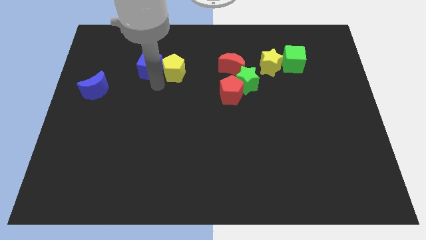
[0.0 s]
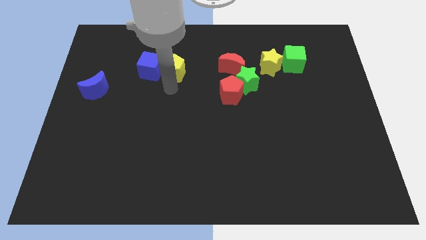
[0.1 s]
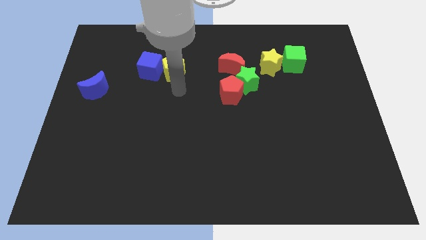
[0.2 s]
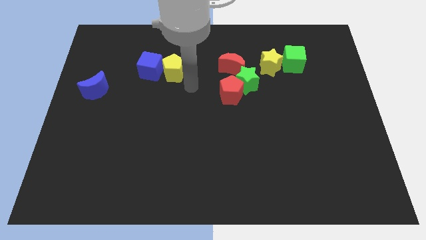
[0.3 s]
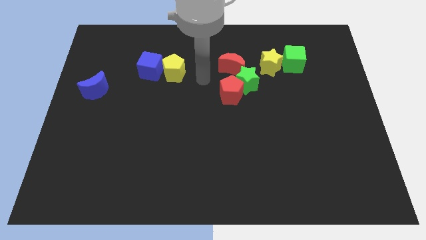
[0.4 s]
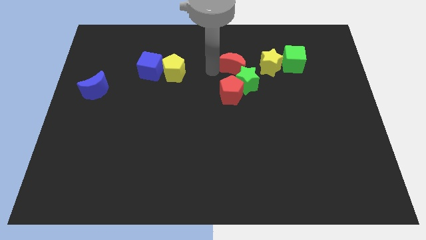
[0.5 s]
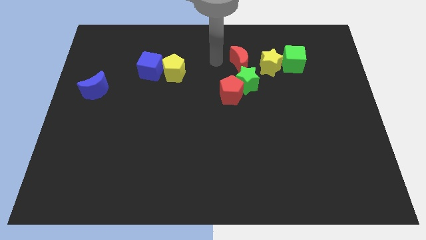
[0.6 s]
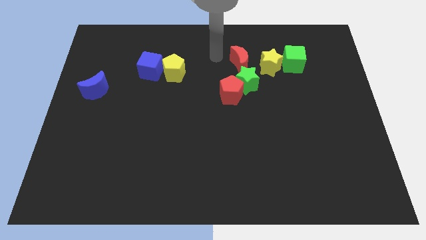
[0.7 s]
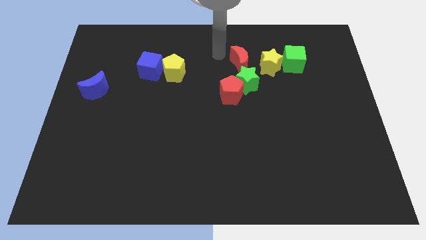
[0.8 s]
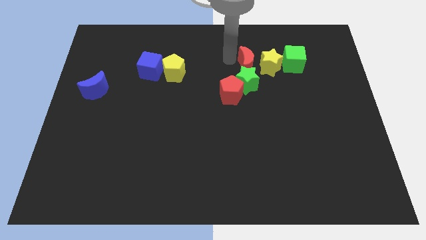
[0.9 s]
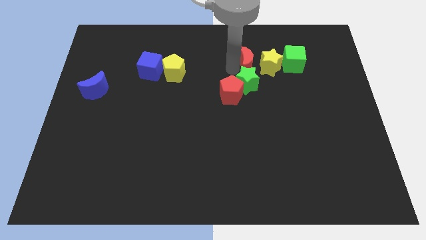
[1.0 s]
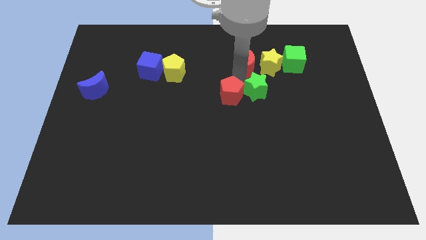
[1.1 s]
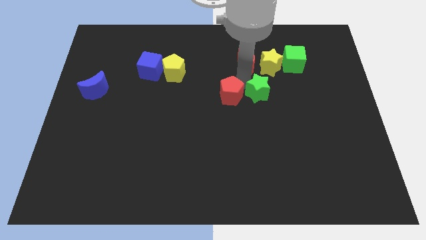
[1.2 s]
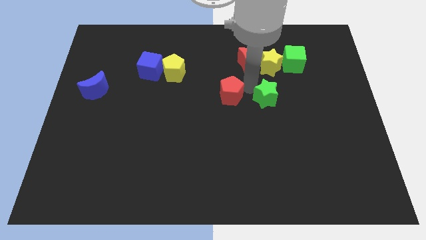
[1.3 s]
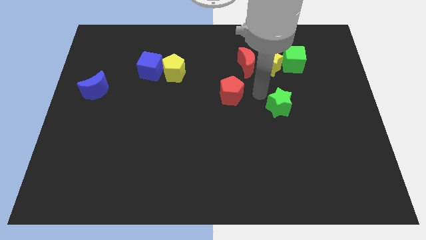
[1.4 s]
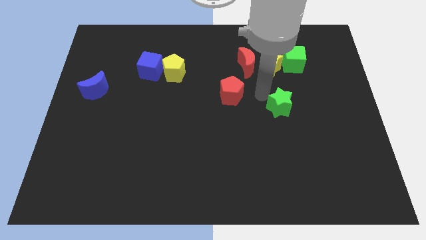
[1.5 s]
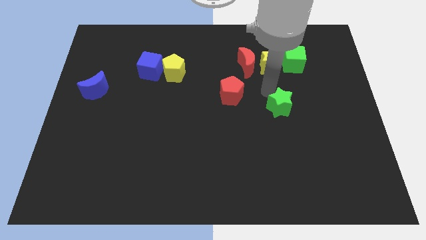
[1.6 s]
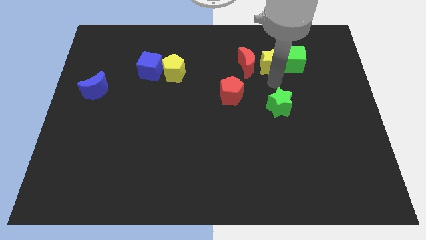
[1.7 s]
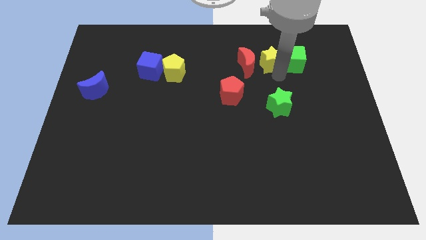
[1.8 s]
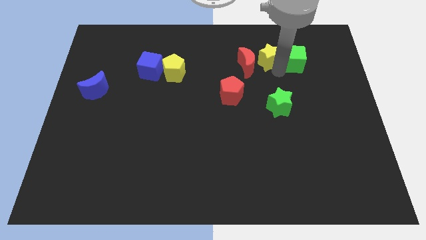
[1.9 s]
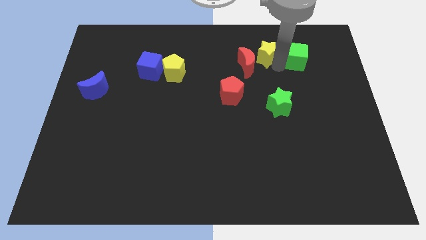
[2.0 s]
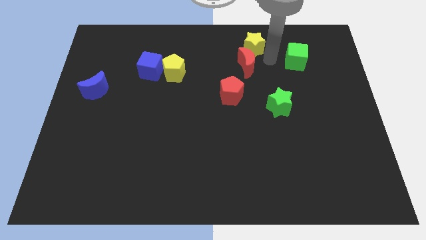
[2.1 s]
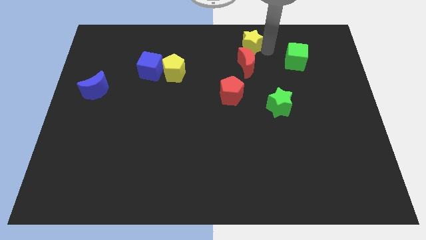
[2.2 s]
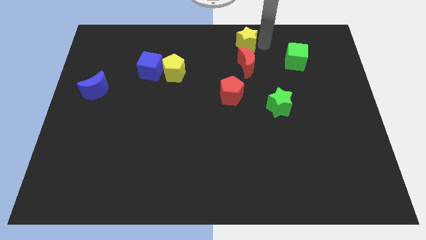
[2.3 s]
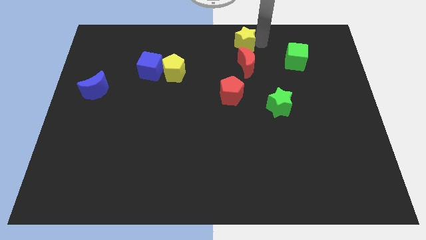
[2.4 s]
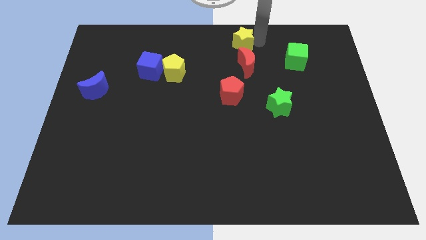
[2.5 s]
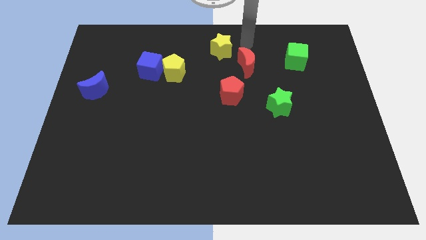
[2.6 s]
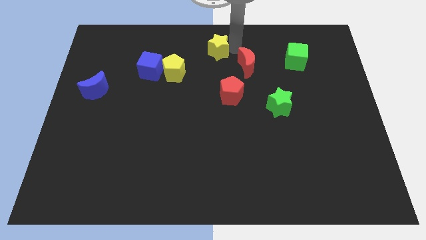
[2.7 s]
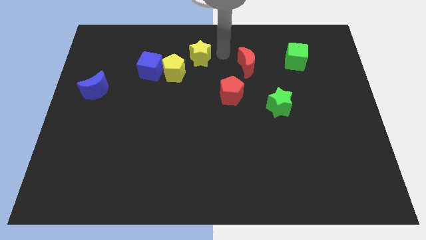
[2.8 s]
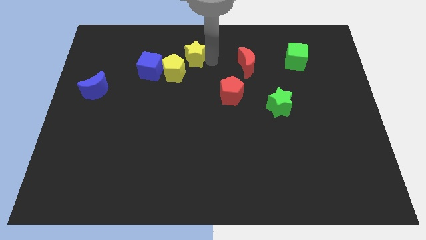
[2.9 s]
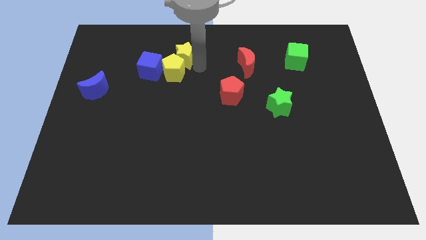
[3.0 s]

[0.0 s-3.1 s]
move the yellow star to the top right to the yellow pentagon

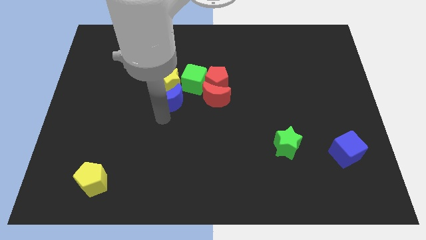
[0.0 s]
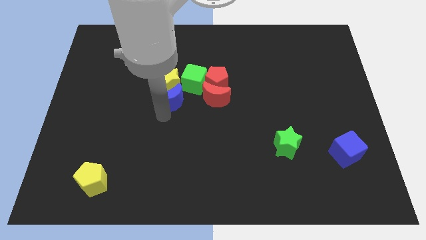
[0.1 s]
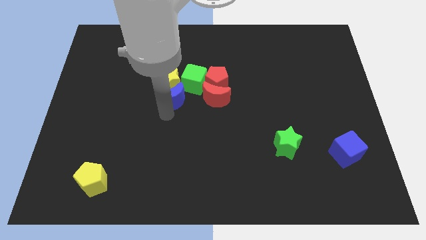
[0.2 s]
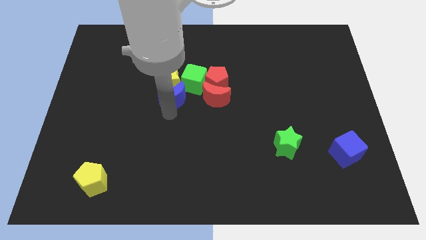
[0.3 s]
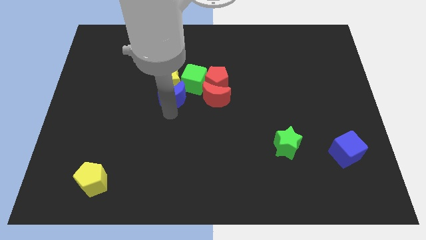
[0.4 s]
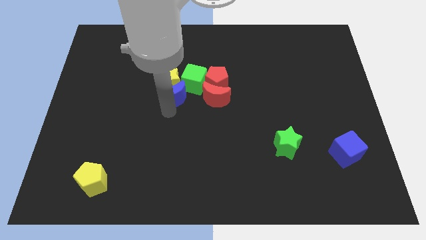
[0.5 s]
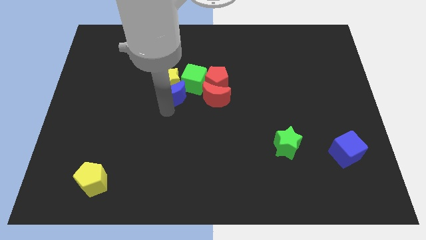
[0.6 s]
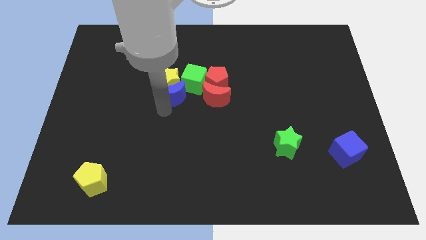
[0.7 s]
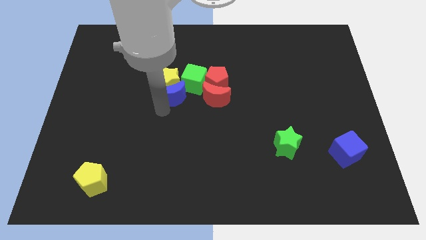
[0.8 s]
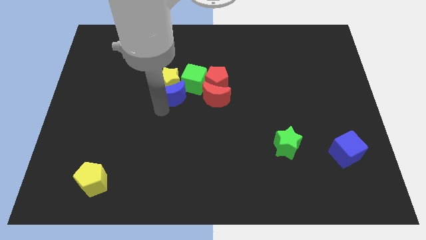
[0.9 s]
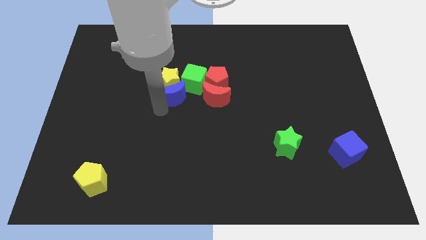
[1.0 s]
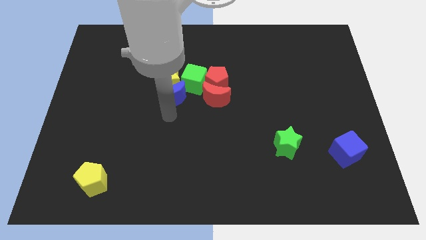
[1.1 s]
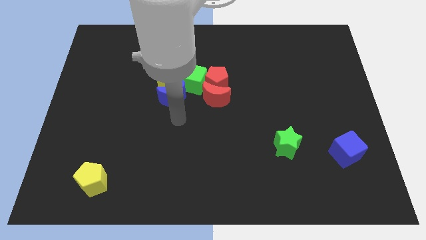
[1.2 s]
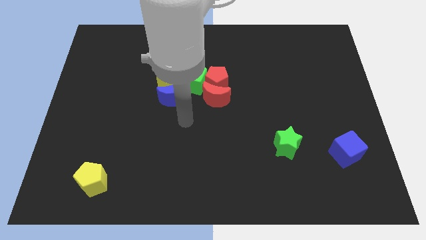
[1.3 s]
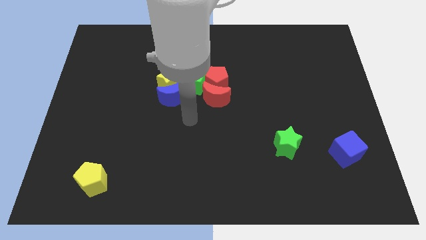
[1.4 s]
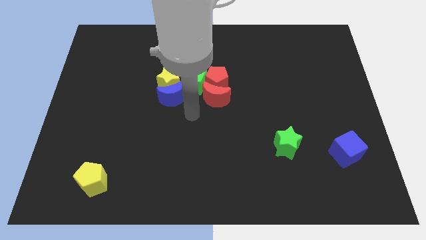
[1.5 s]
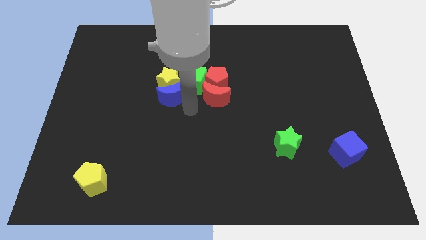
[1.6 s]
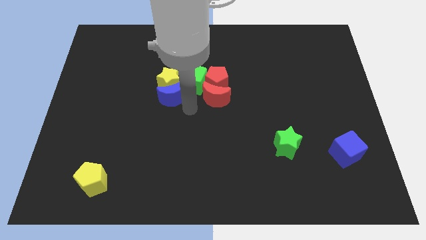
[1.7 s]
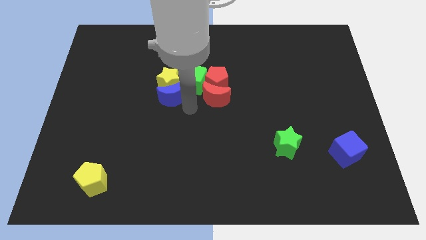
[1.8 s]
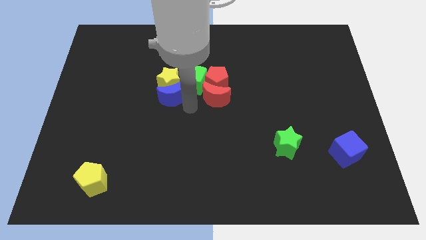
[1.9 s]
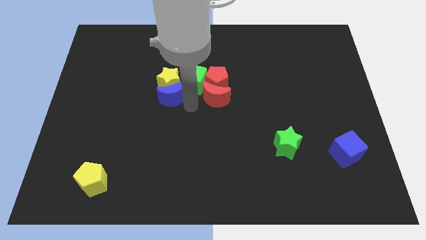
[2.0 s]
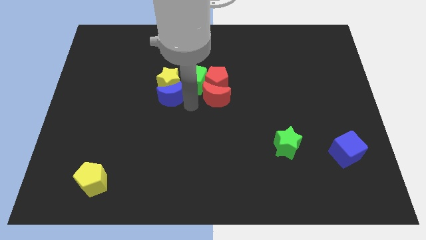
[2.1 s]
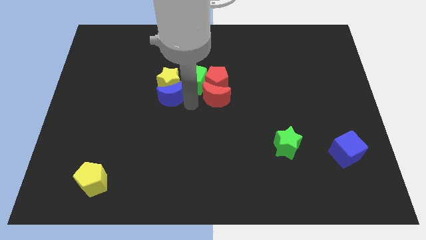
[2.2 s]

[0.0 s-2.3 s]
place the blue crescent bottom of the yellow star

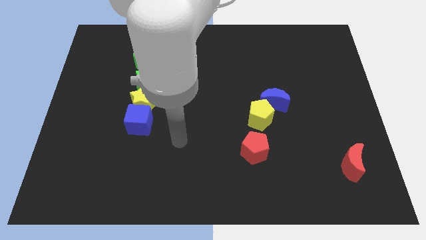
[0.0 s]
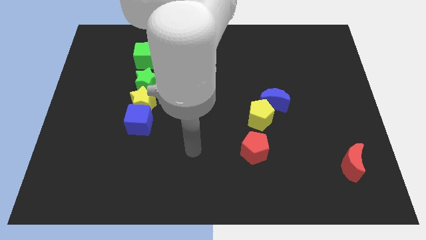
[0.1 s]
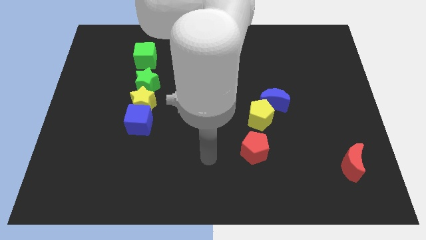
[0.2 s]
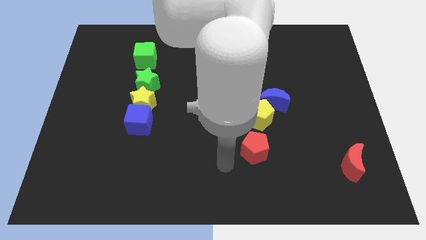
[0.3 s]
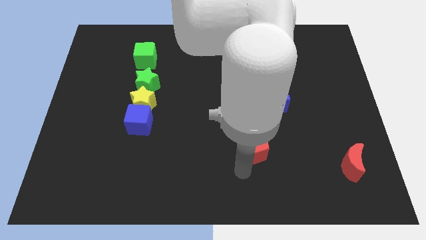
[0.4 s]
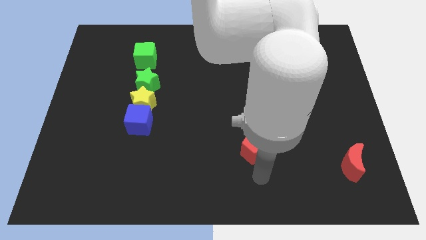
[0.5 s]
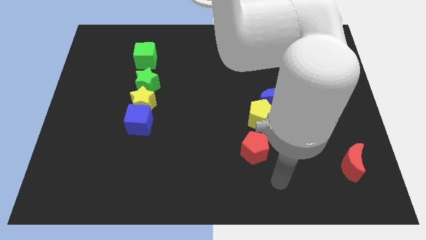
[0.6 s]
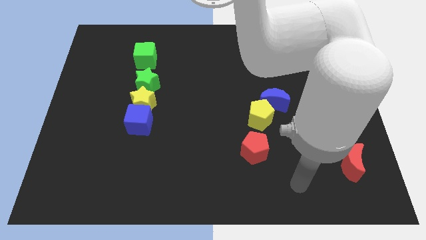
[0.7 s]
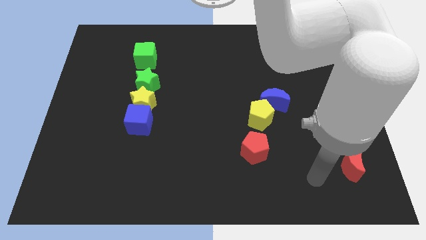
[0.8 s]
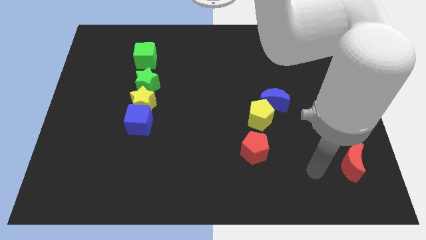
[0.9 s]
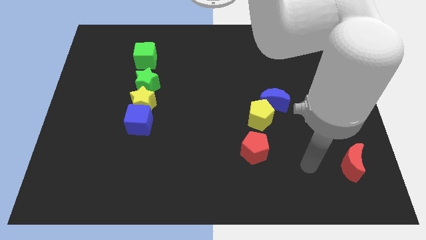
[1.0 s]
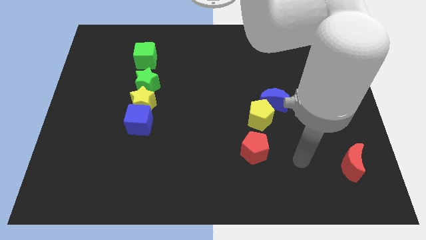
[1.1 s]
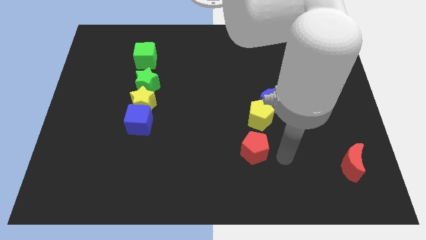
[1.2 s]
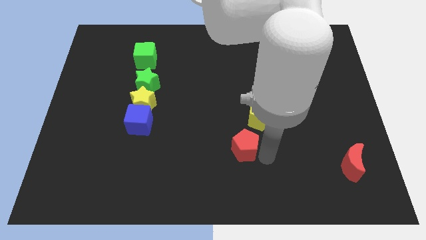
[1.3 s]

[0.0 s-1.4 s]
place your arm to the right of red pentagon

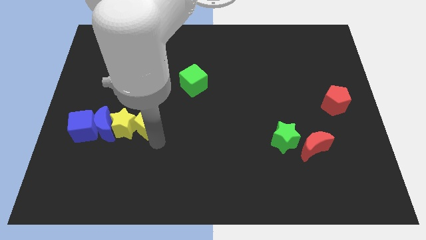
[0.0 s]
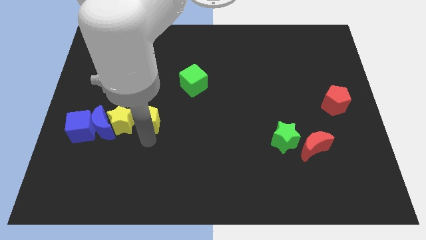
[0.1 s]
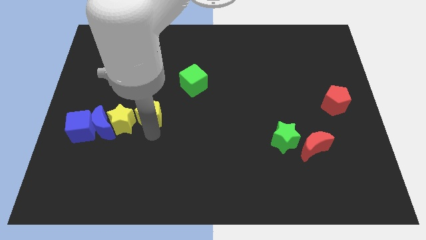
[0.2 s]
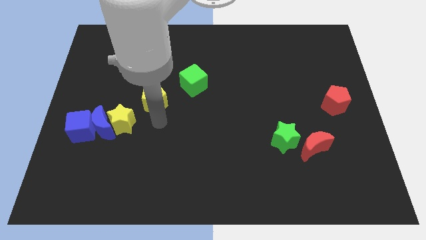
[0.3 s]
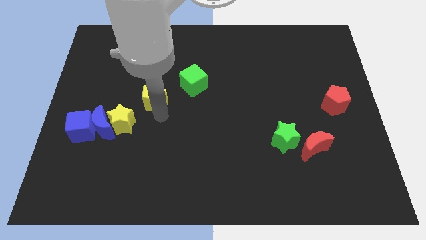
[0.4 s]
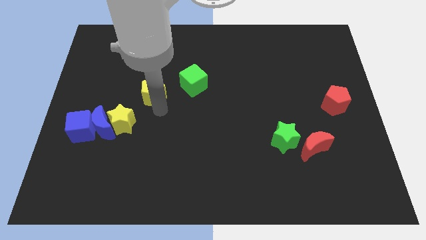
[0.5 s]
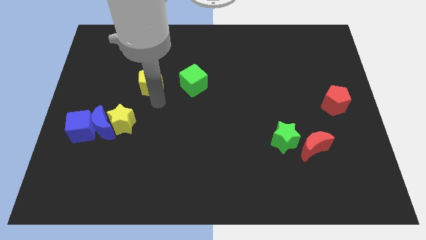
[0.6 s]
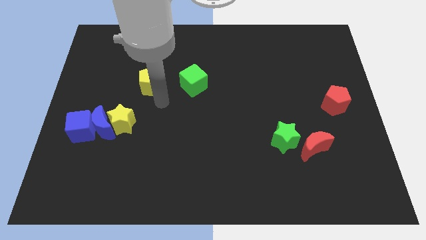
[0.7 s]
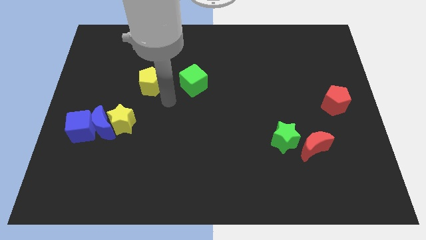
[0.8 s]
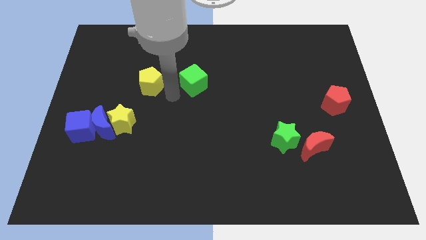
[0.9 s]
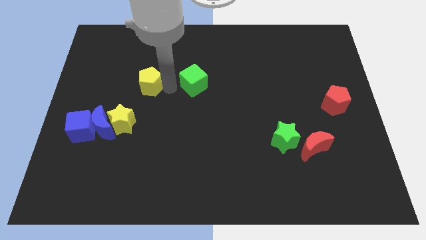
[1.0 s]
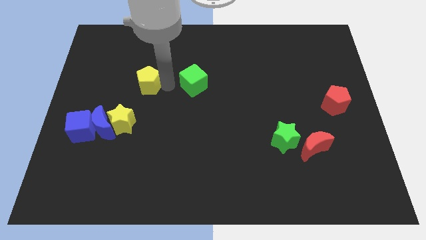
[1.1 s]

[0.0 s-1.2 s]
move the yellow pentagon left to the green cube

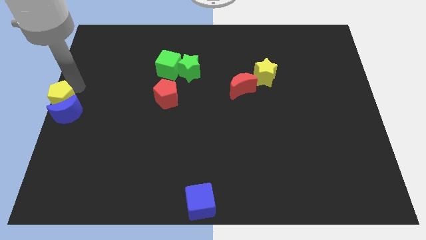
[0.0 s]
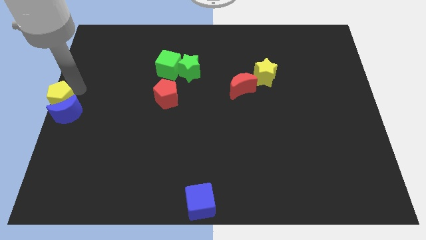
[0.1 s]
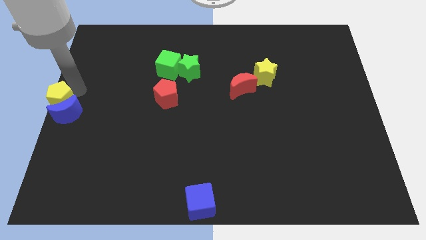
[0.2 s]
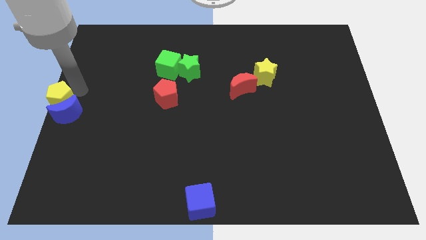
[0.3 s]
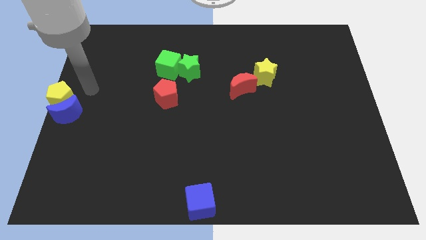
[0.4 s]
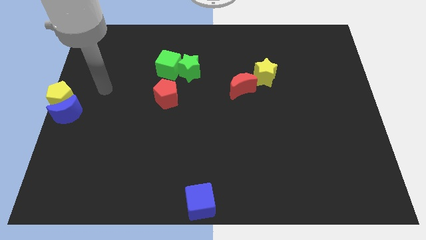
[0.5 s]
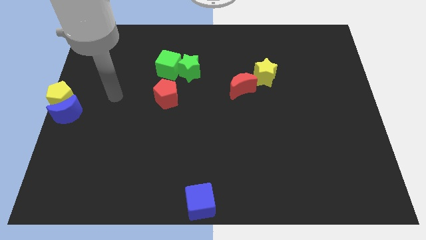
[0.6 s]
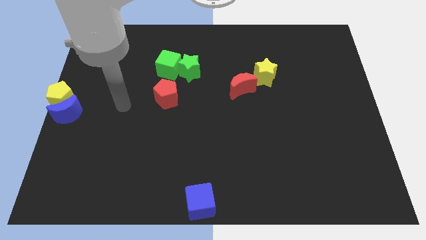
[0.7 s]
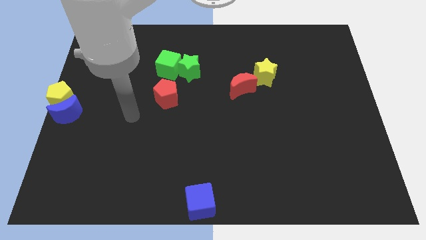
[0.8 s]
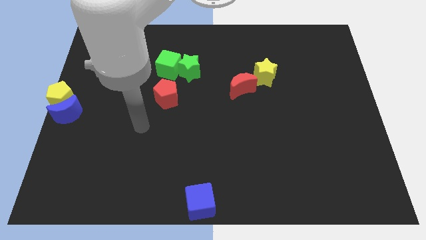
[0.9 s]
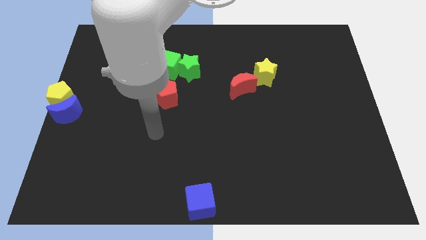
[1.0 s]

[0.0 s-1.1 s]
move the arm away from the yellow pentagon
